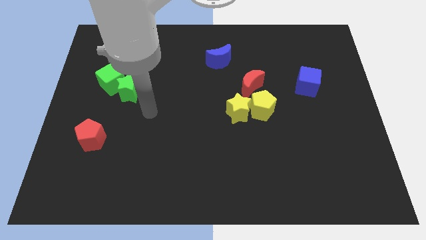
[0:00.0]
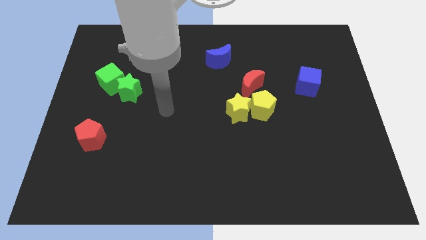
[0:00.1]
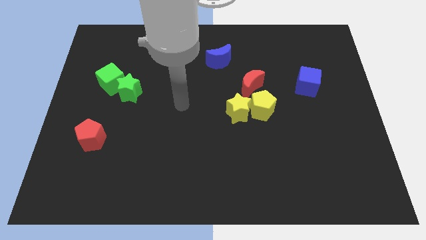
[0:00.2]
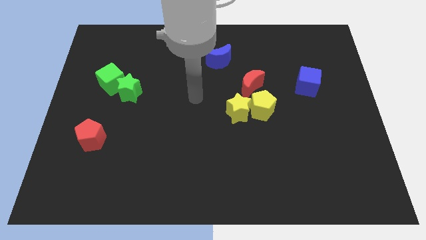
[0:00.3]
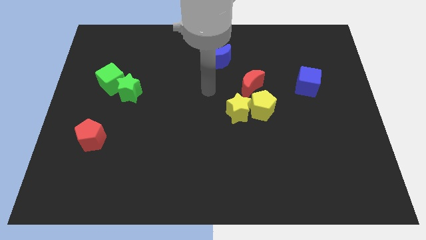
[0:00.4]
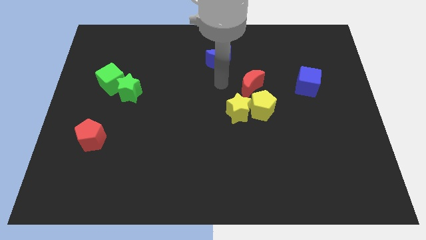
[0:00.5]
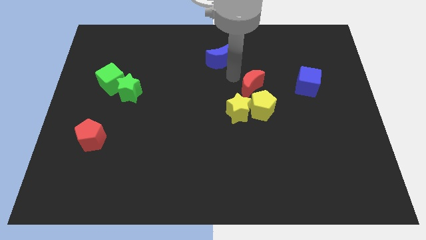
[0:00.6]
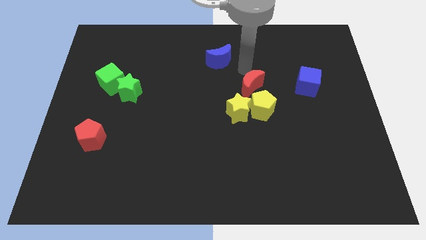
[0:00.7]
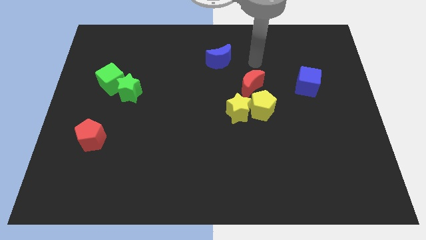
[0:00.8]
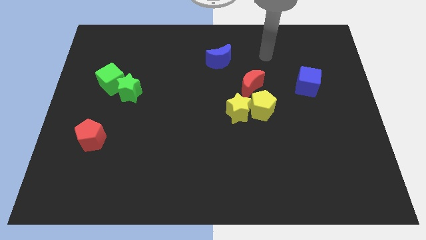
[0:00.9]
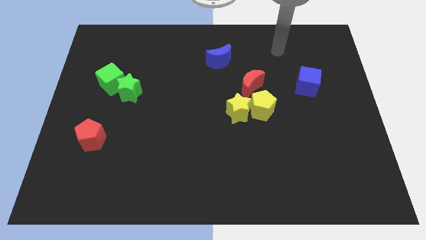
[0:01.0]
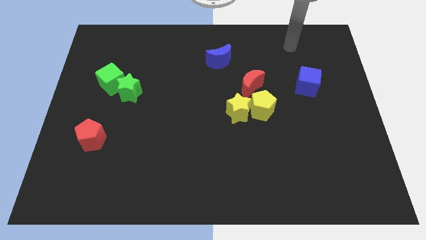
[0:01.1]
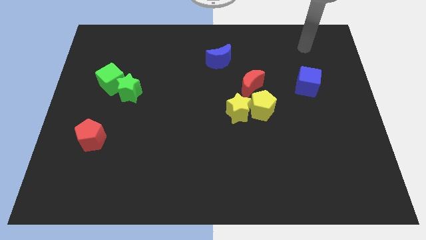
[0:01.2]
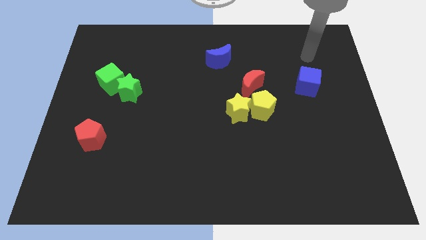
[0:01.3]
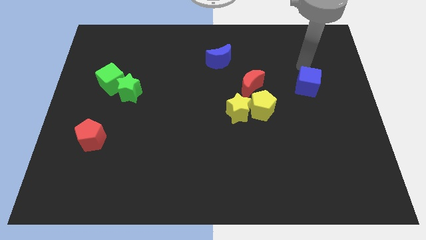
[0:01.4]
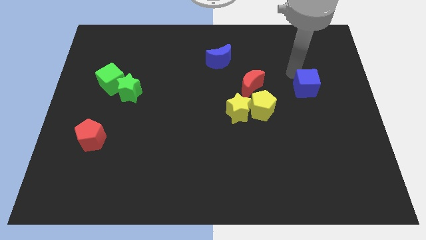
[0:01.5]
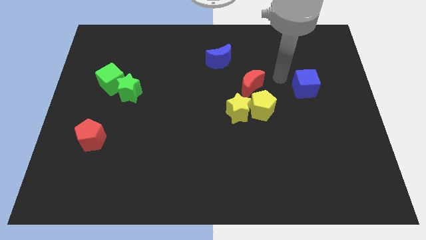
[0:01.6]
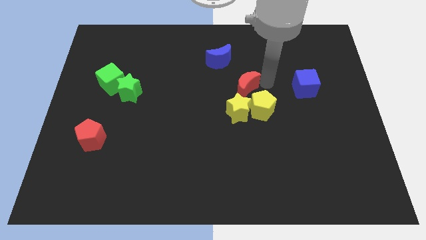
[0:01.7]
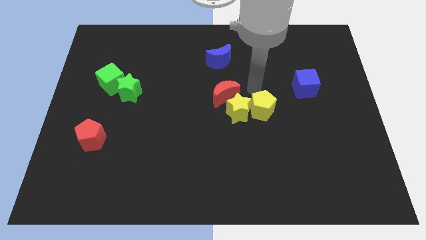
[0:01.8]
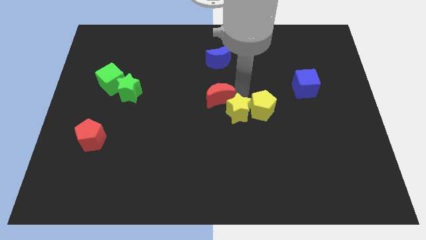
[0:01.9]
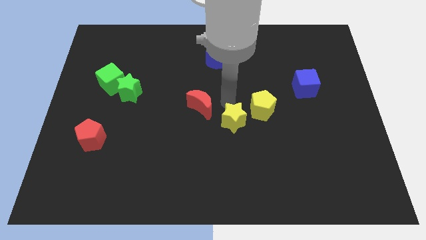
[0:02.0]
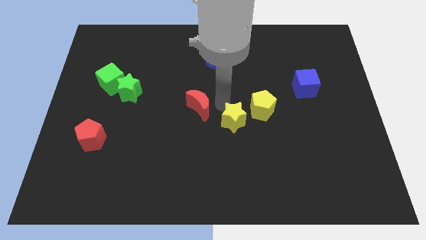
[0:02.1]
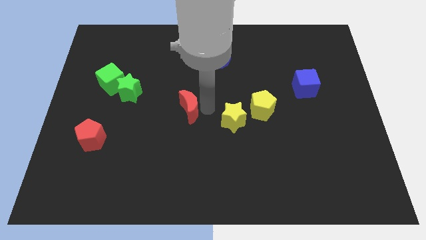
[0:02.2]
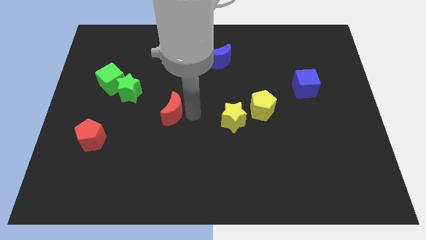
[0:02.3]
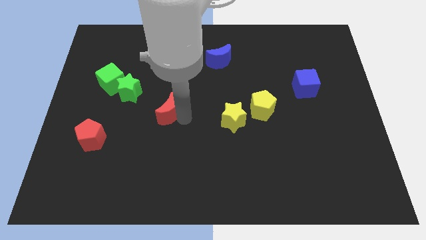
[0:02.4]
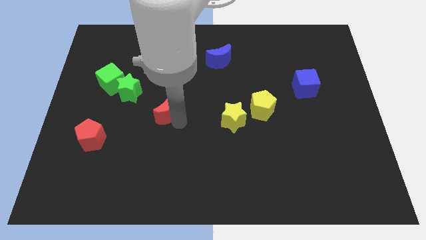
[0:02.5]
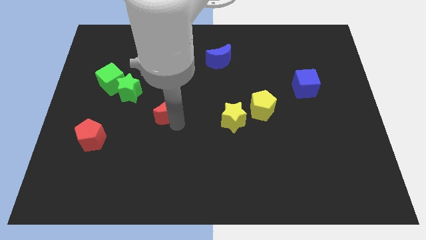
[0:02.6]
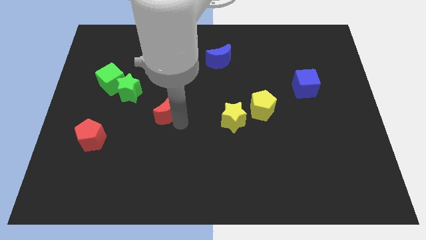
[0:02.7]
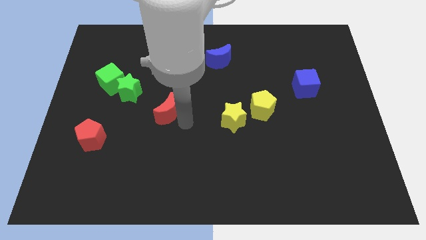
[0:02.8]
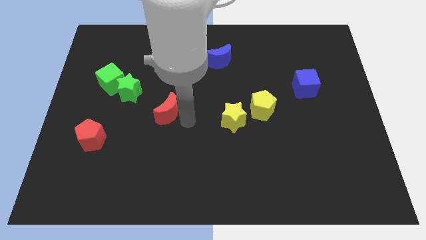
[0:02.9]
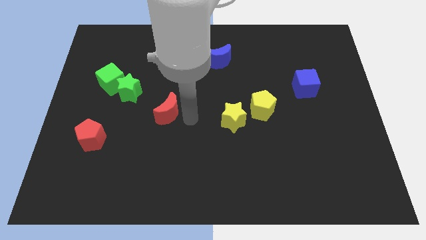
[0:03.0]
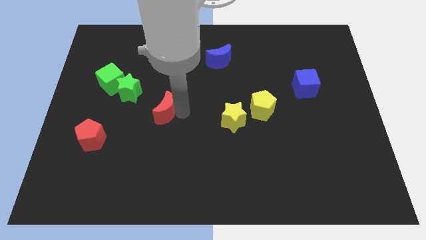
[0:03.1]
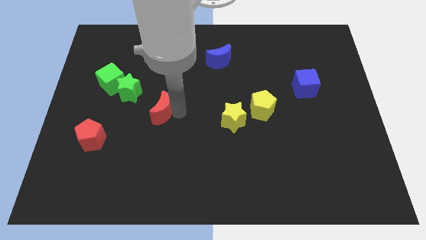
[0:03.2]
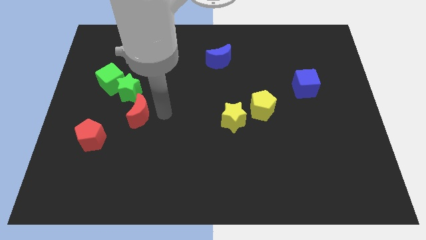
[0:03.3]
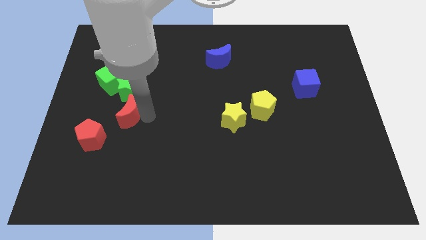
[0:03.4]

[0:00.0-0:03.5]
move the red moon diagonal top right to red pentagon

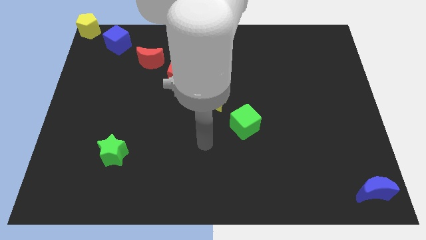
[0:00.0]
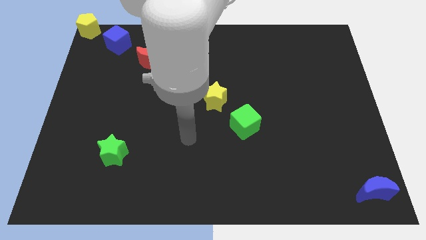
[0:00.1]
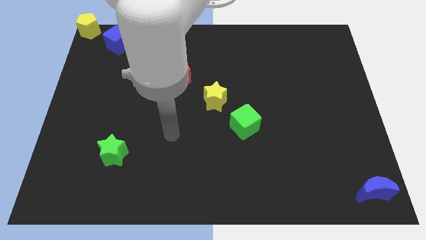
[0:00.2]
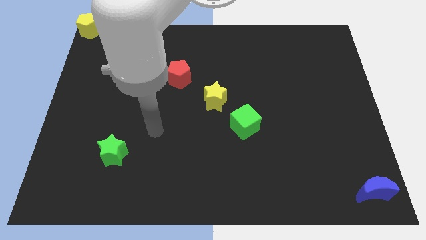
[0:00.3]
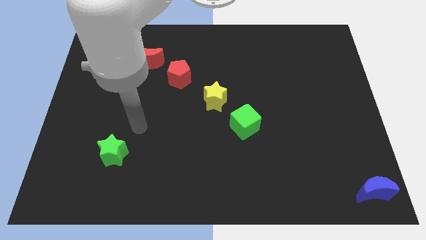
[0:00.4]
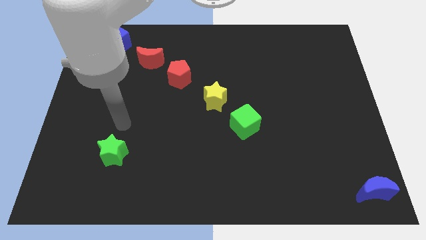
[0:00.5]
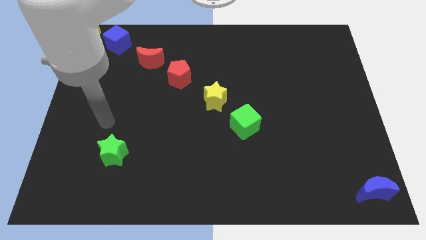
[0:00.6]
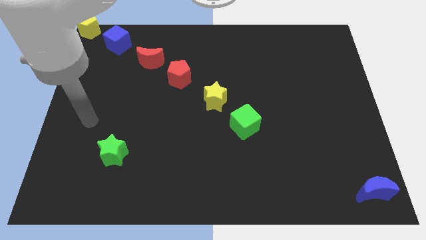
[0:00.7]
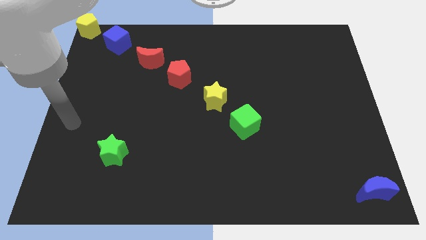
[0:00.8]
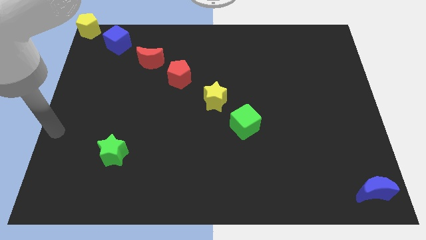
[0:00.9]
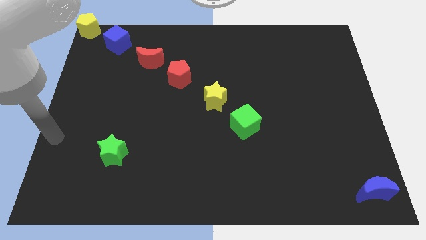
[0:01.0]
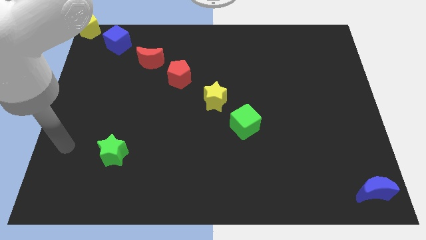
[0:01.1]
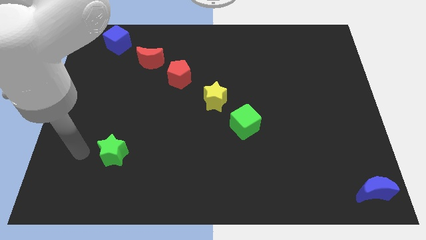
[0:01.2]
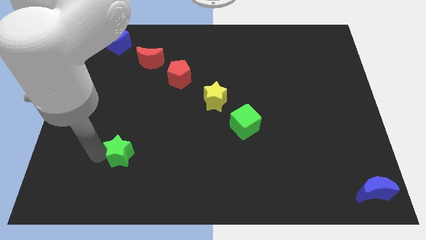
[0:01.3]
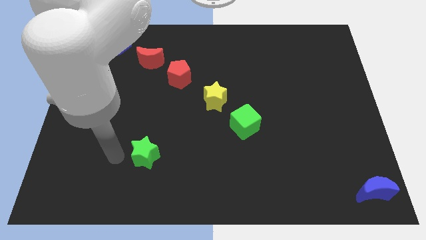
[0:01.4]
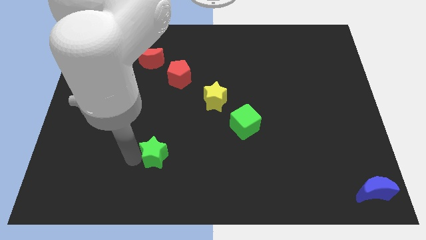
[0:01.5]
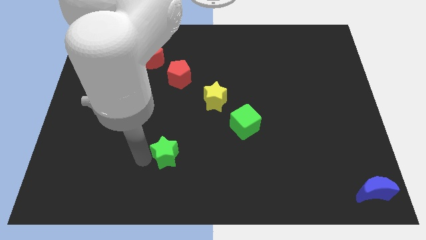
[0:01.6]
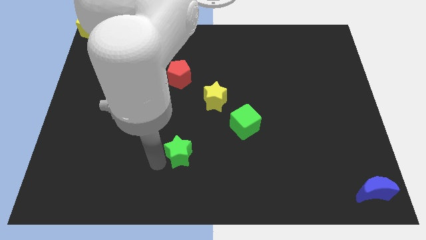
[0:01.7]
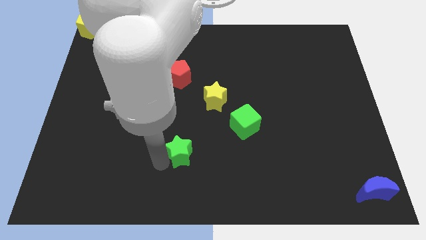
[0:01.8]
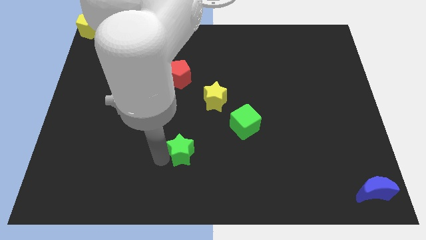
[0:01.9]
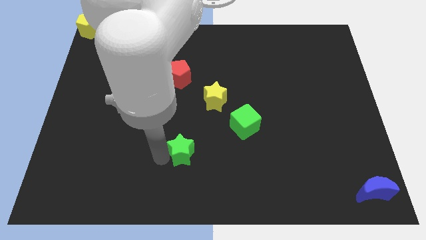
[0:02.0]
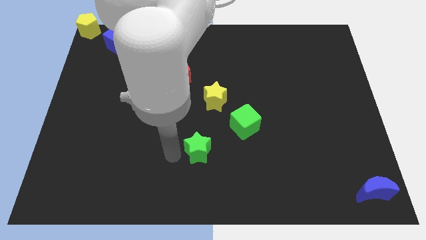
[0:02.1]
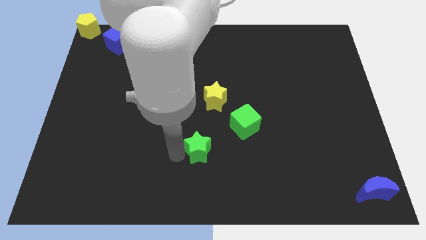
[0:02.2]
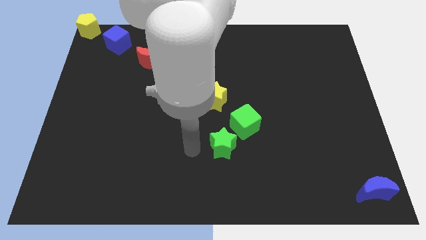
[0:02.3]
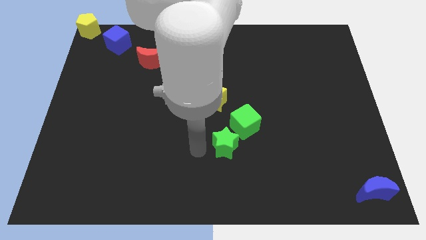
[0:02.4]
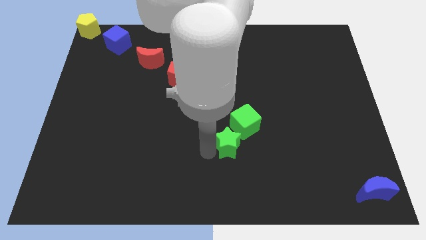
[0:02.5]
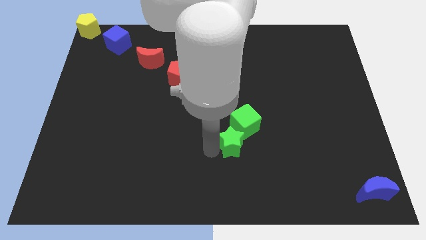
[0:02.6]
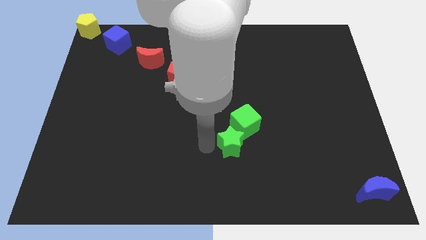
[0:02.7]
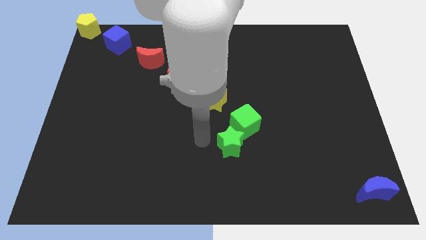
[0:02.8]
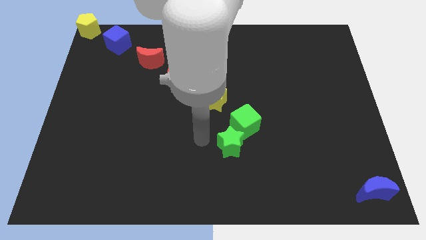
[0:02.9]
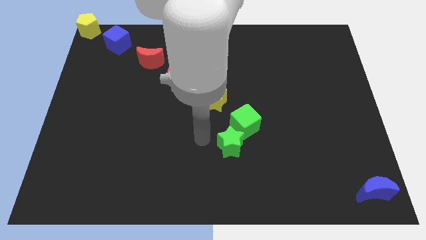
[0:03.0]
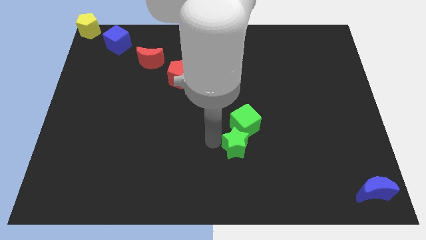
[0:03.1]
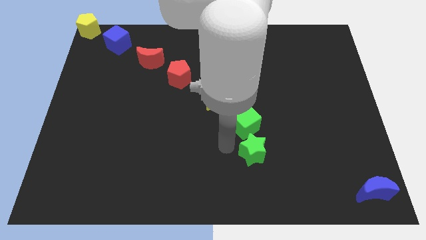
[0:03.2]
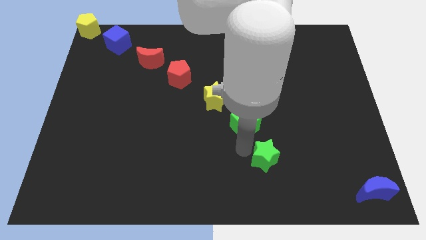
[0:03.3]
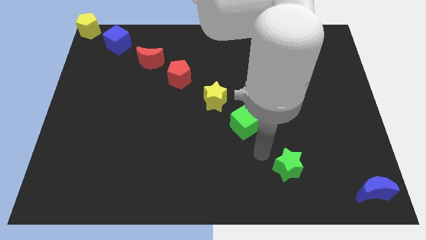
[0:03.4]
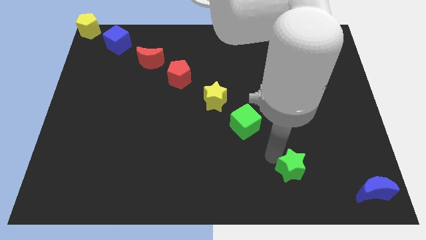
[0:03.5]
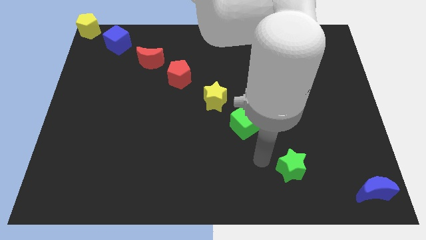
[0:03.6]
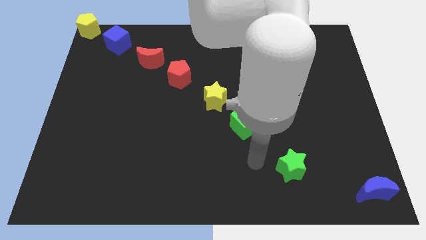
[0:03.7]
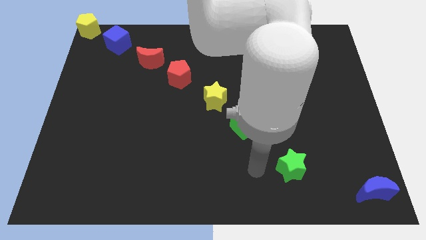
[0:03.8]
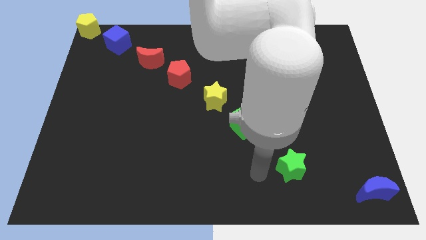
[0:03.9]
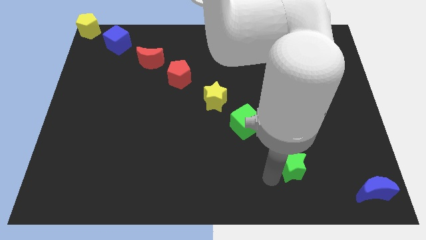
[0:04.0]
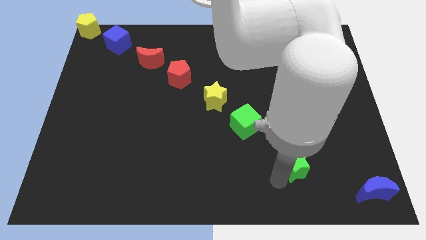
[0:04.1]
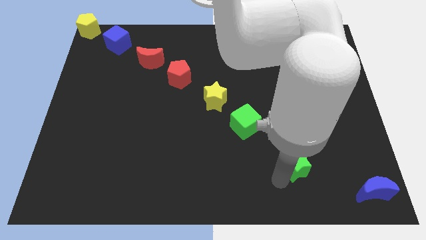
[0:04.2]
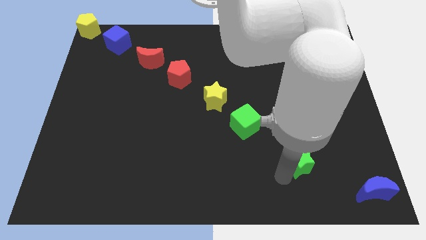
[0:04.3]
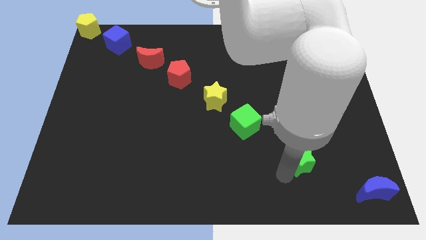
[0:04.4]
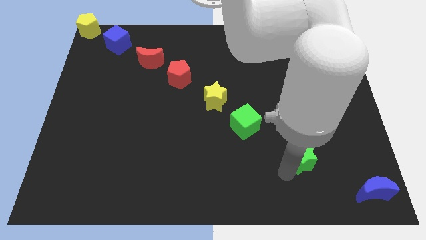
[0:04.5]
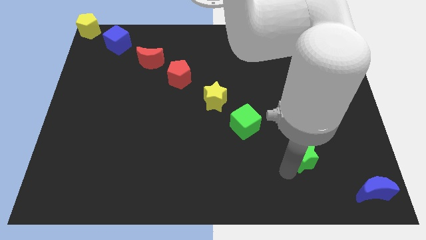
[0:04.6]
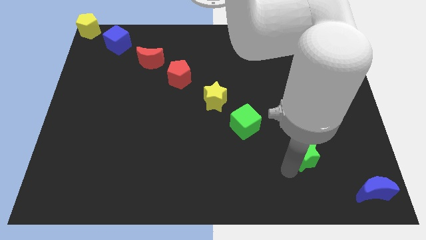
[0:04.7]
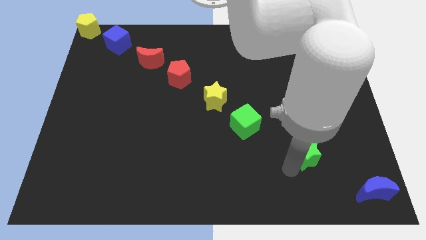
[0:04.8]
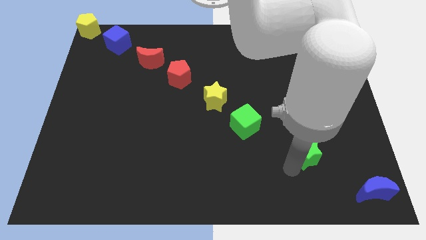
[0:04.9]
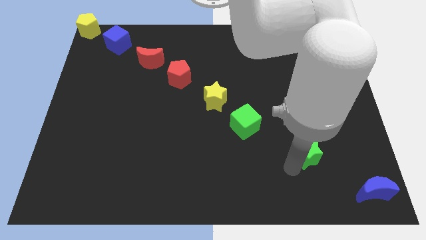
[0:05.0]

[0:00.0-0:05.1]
move the green star in between the green cube and blue crescent

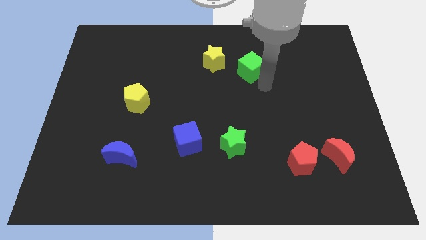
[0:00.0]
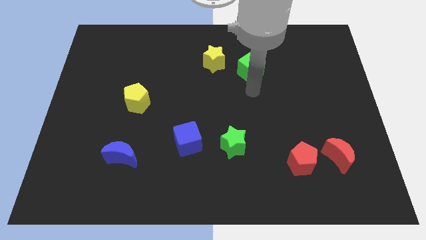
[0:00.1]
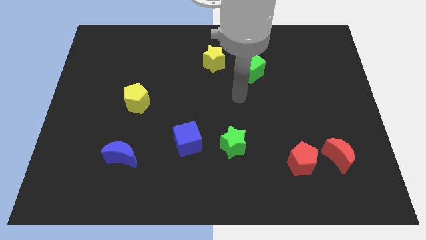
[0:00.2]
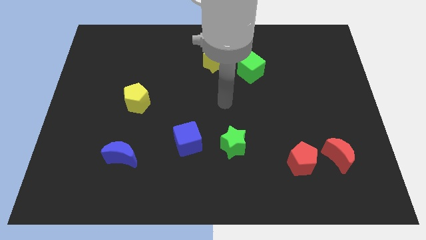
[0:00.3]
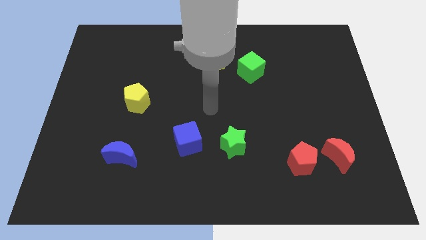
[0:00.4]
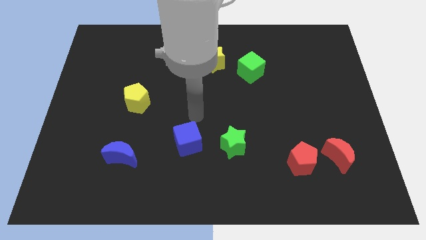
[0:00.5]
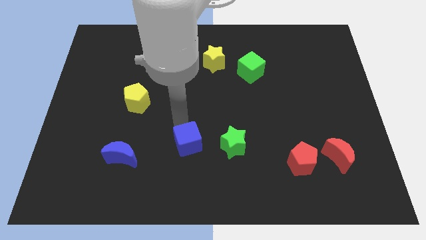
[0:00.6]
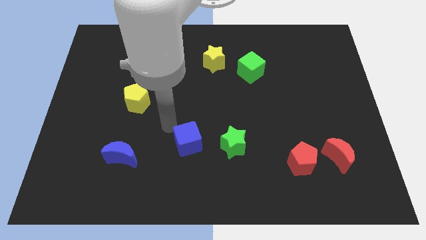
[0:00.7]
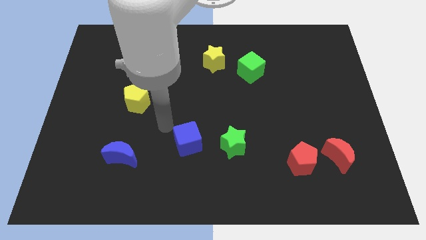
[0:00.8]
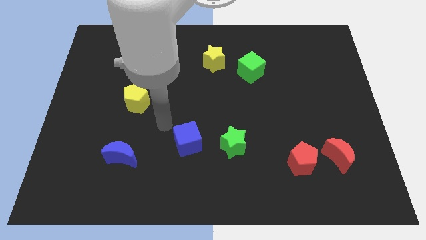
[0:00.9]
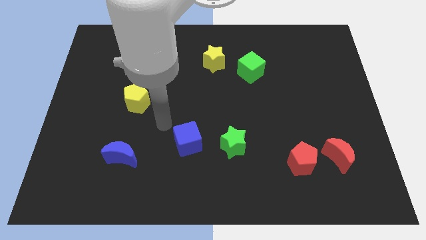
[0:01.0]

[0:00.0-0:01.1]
move your arm away from the green cube
